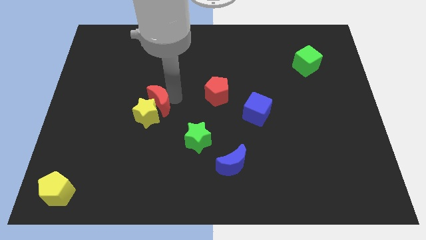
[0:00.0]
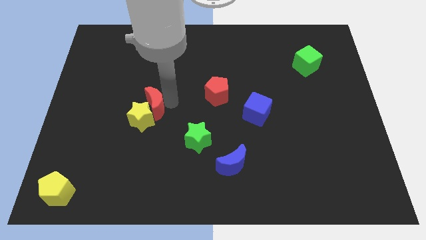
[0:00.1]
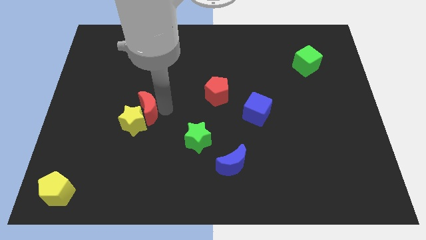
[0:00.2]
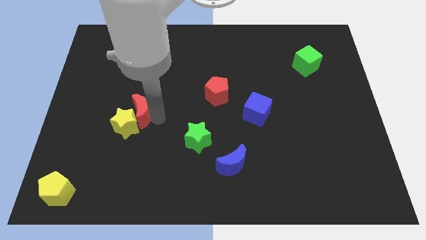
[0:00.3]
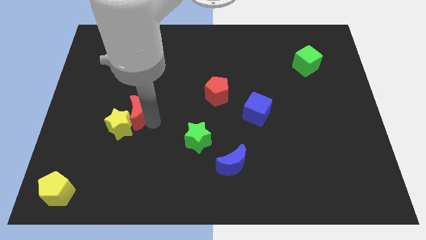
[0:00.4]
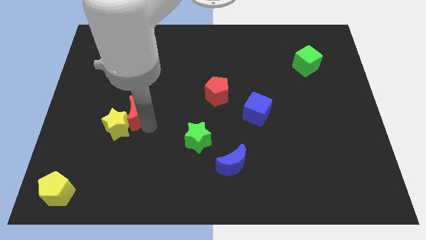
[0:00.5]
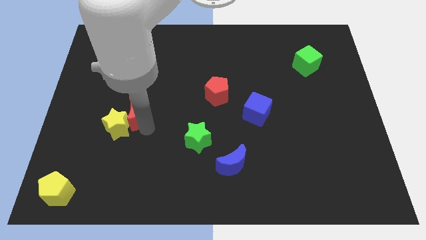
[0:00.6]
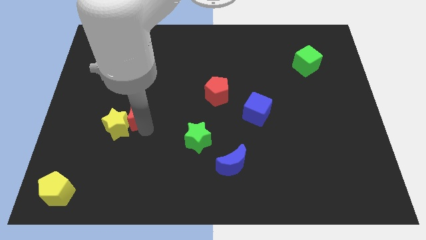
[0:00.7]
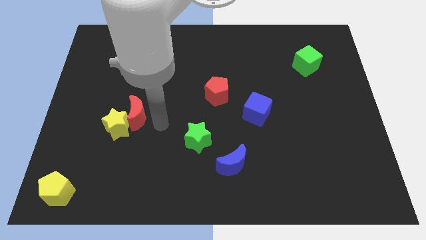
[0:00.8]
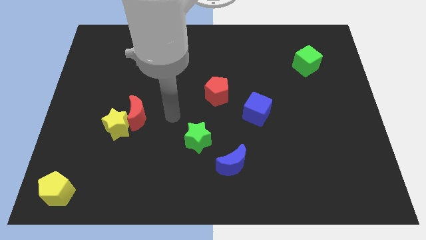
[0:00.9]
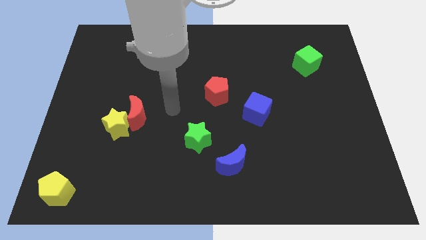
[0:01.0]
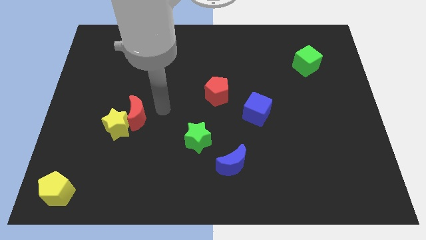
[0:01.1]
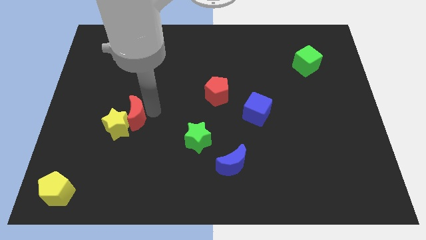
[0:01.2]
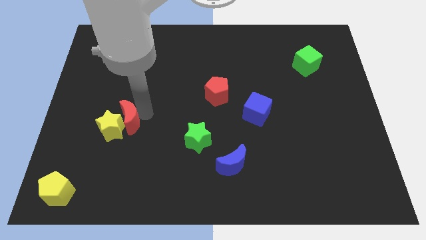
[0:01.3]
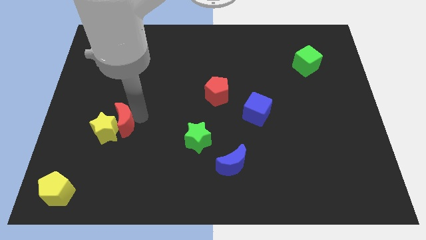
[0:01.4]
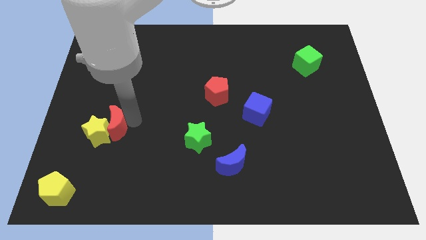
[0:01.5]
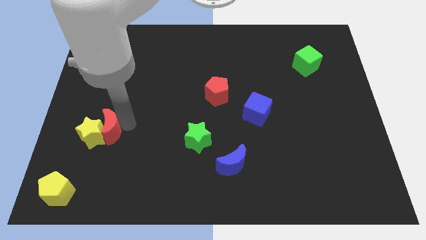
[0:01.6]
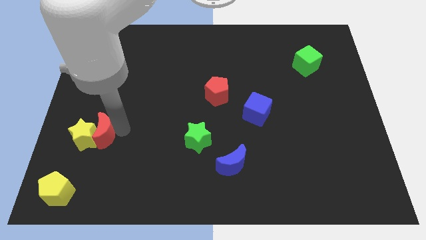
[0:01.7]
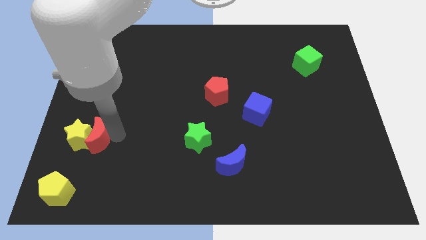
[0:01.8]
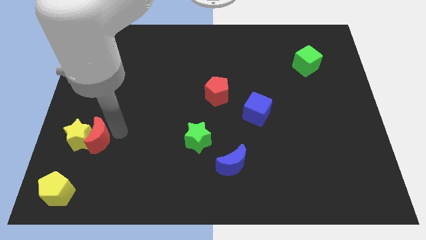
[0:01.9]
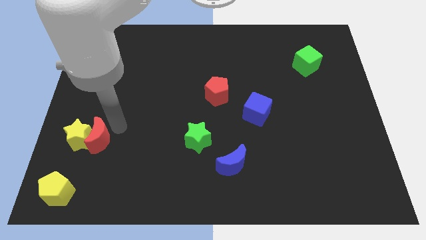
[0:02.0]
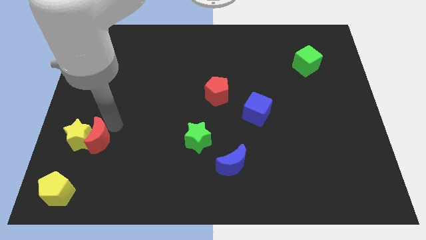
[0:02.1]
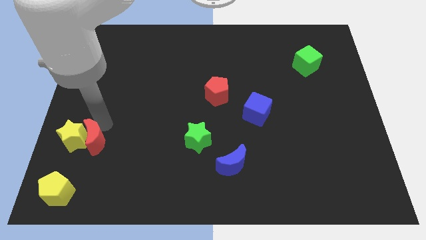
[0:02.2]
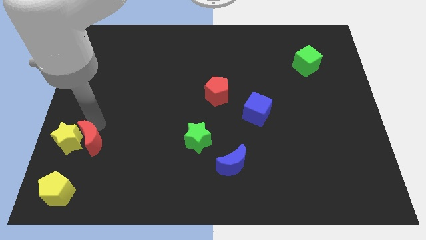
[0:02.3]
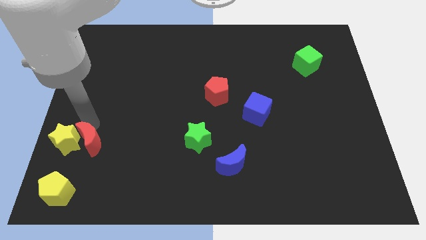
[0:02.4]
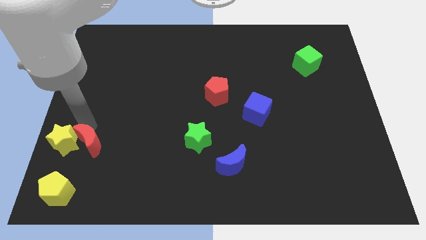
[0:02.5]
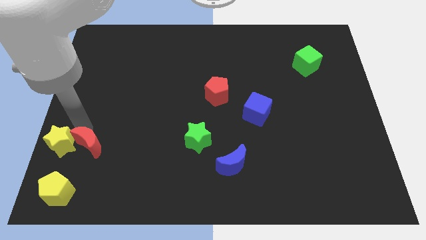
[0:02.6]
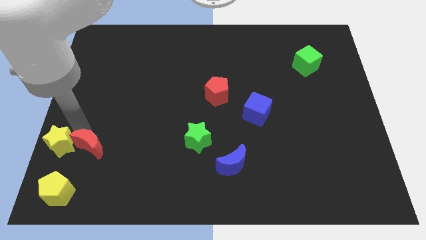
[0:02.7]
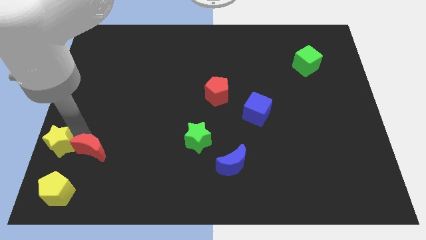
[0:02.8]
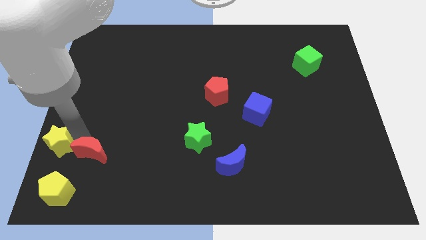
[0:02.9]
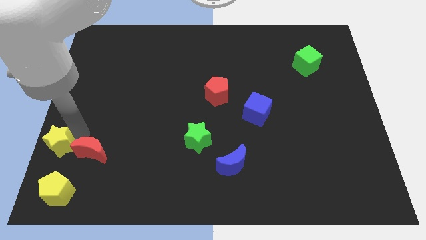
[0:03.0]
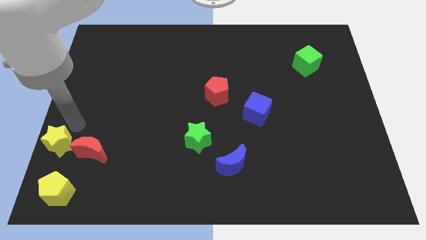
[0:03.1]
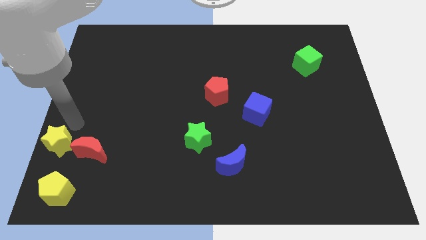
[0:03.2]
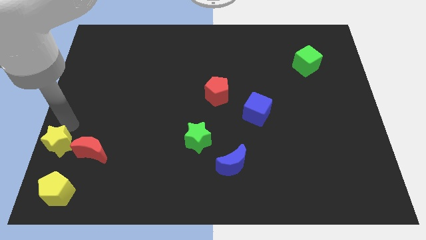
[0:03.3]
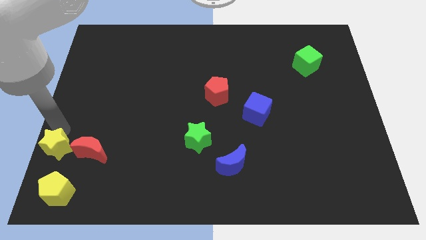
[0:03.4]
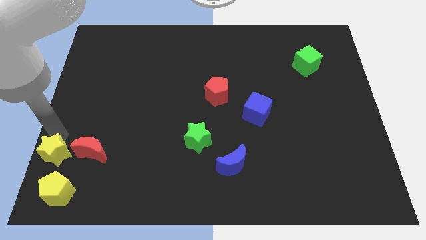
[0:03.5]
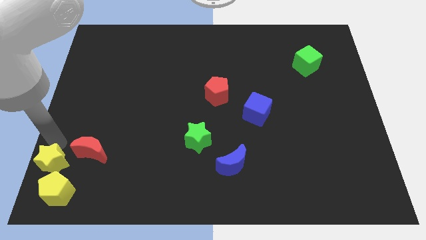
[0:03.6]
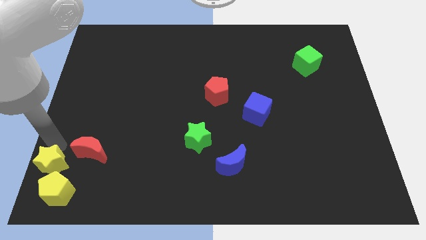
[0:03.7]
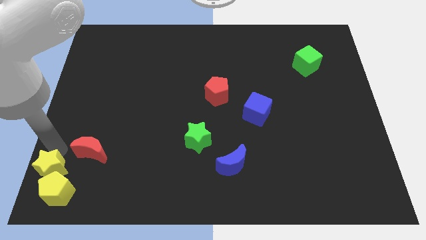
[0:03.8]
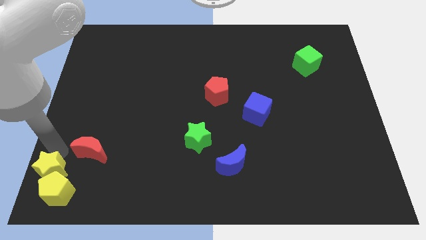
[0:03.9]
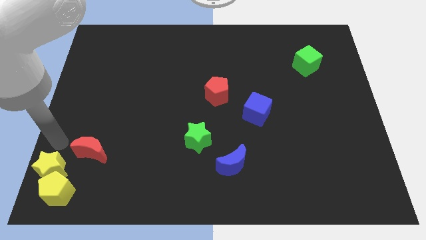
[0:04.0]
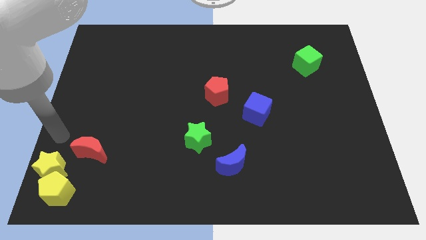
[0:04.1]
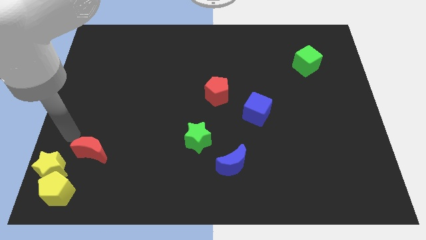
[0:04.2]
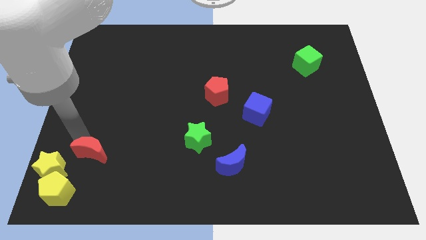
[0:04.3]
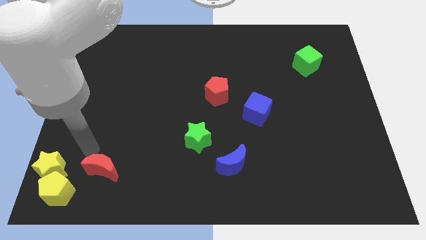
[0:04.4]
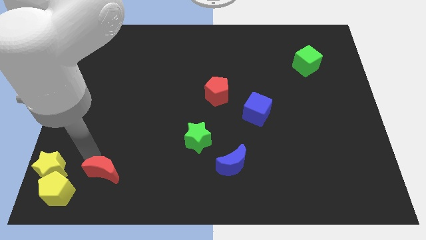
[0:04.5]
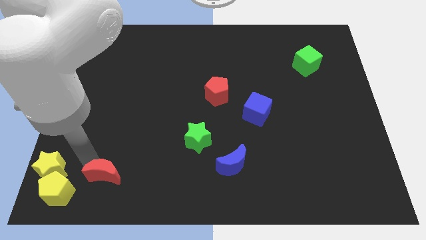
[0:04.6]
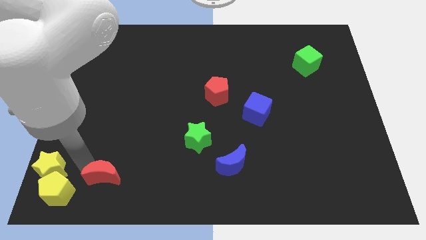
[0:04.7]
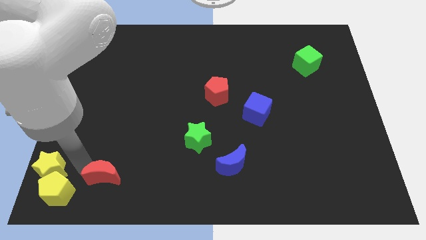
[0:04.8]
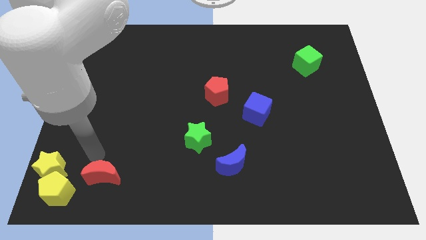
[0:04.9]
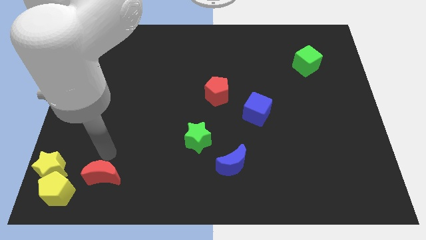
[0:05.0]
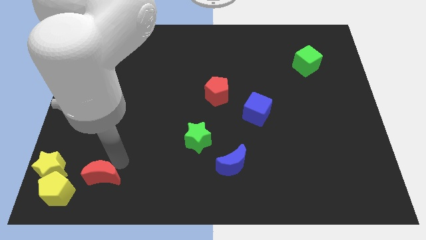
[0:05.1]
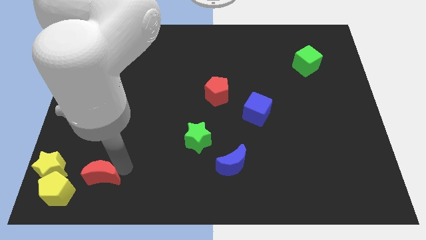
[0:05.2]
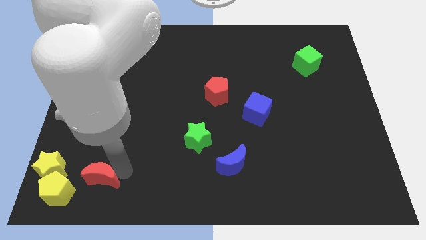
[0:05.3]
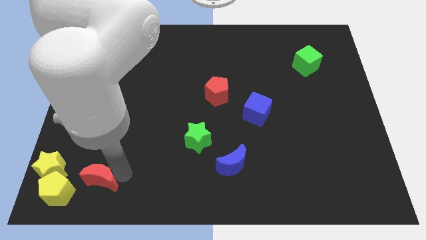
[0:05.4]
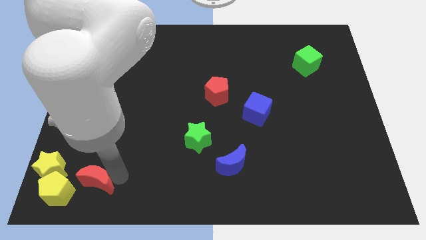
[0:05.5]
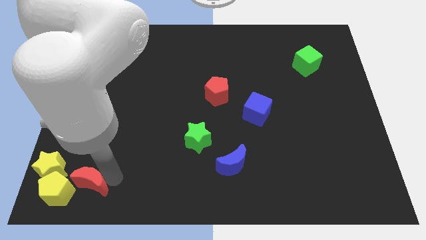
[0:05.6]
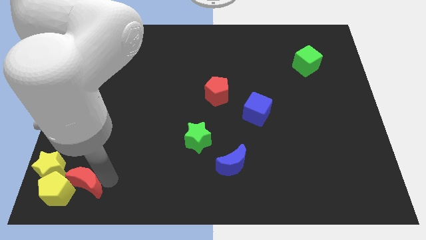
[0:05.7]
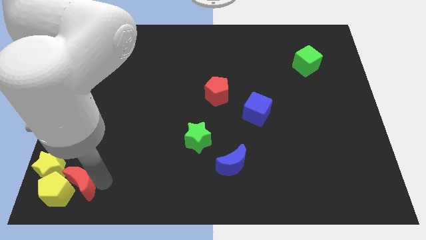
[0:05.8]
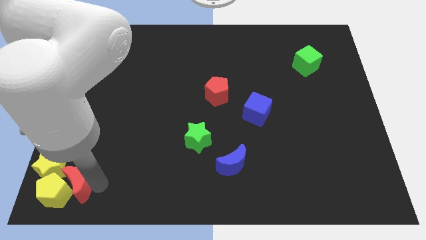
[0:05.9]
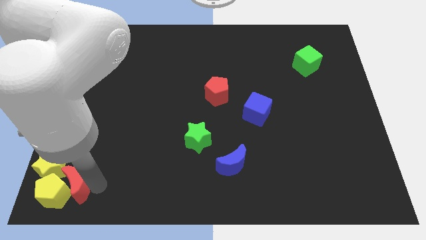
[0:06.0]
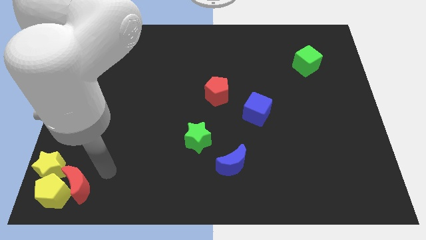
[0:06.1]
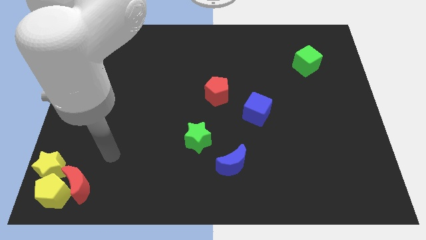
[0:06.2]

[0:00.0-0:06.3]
push the red crescent and the yellow star into the yellow pentagon

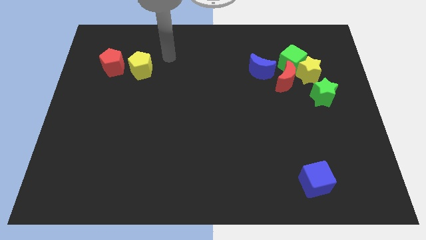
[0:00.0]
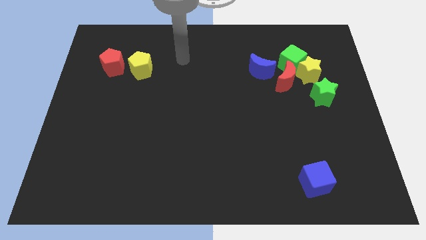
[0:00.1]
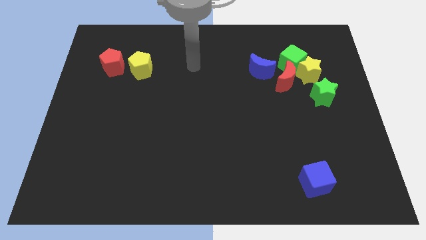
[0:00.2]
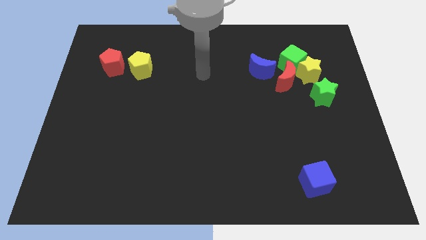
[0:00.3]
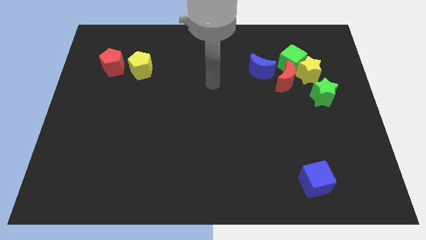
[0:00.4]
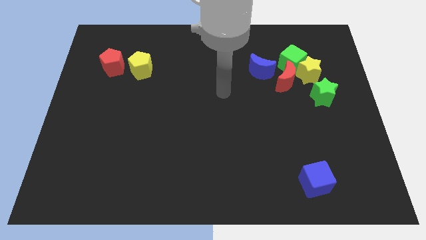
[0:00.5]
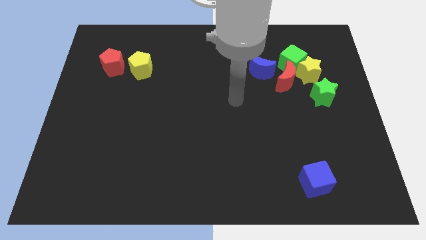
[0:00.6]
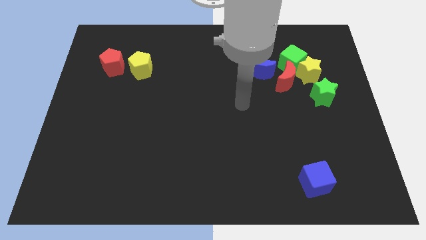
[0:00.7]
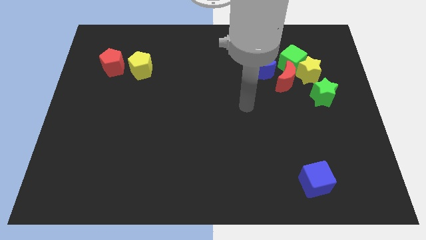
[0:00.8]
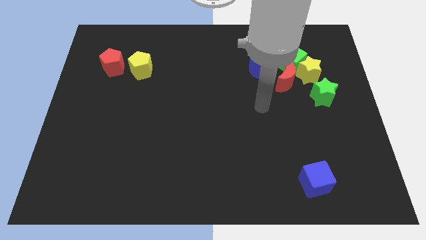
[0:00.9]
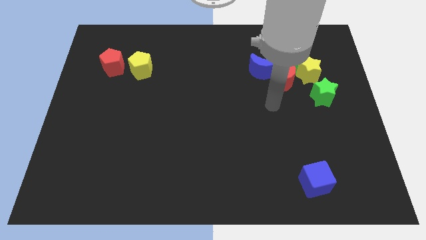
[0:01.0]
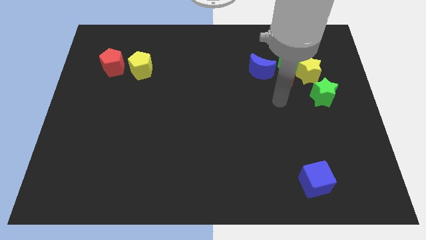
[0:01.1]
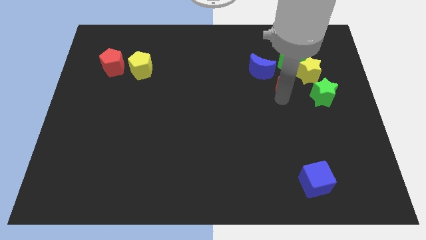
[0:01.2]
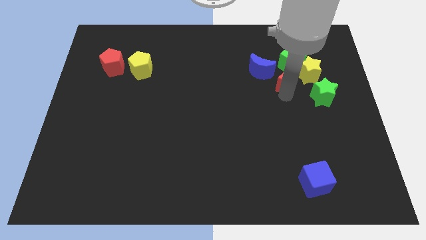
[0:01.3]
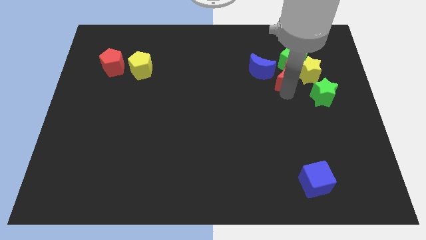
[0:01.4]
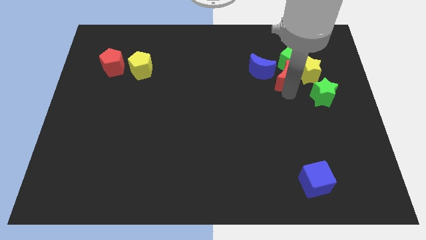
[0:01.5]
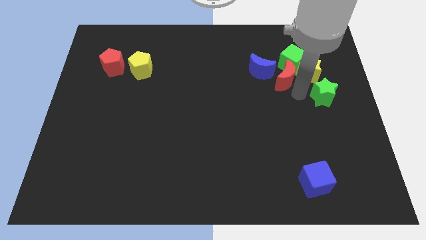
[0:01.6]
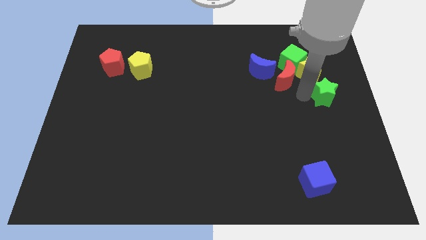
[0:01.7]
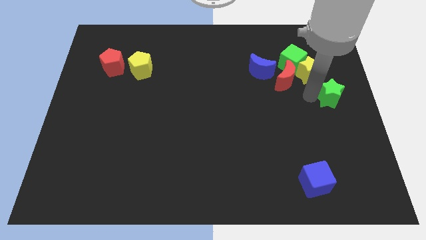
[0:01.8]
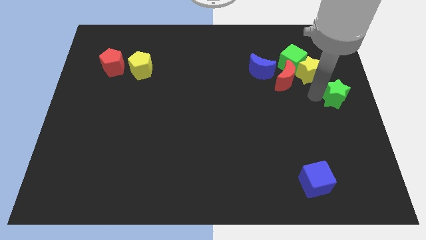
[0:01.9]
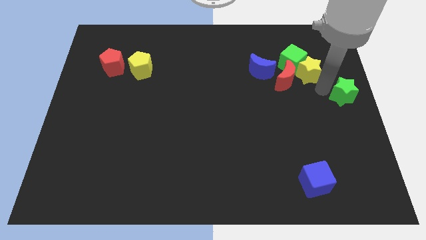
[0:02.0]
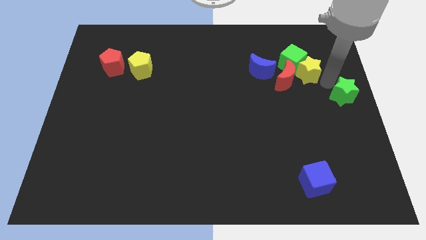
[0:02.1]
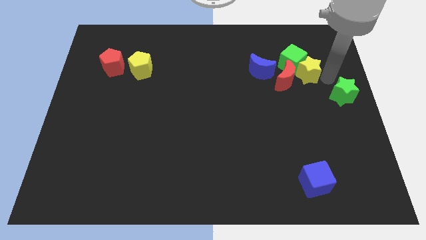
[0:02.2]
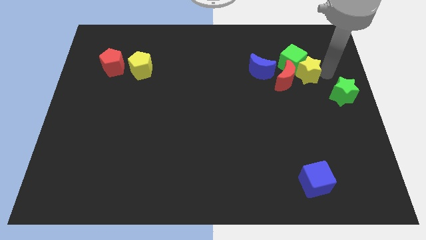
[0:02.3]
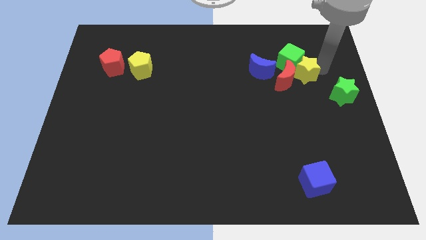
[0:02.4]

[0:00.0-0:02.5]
slide the green star slightly to the right

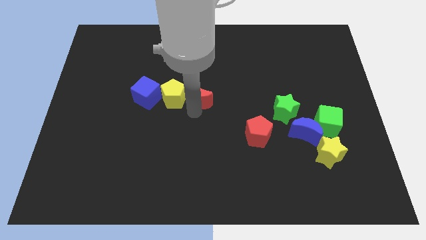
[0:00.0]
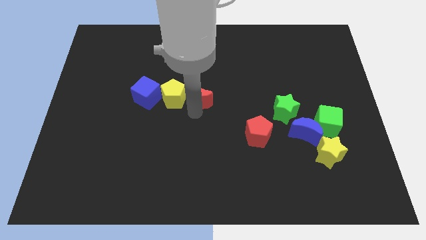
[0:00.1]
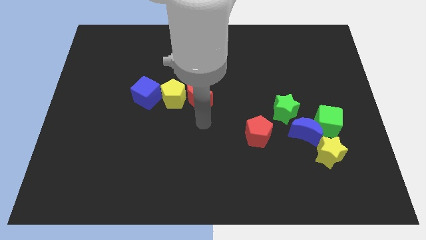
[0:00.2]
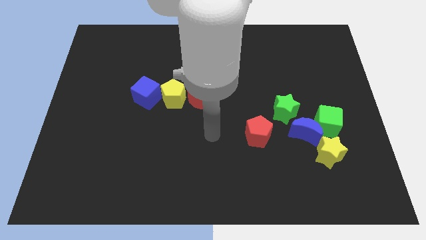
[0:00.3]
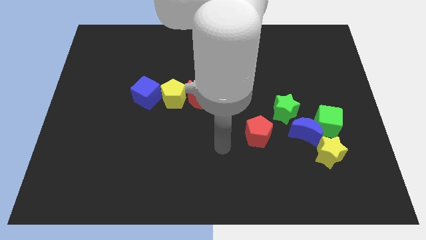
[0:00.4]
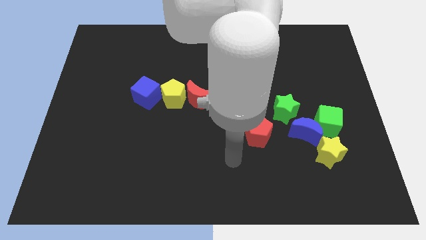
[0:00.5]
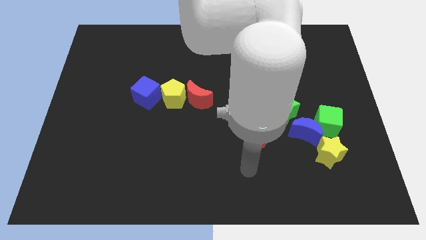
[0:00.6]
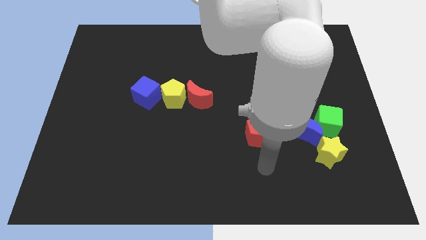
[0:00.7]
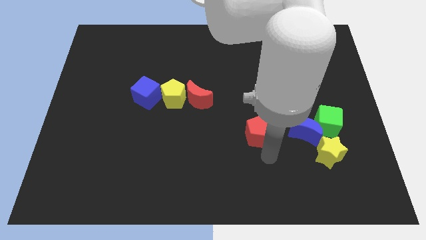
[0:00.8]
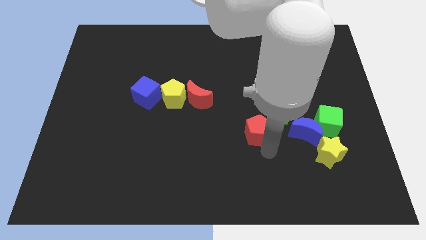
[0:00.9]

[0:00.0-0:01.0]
move the arm towards the red pentagon
